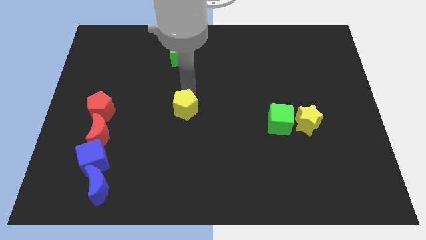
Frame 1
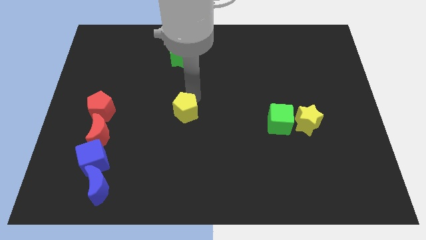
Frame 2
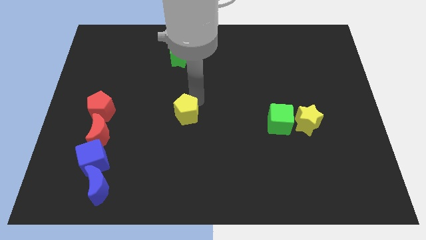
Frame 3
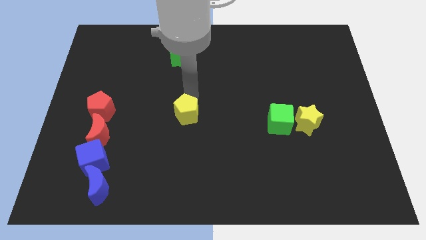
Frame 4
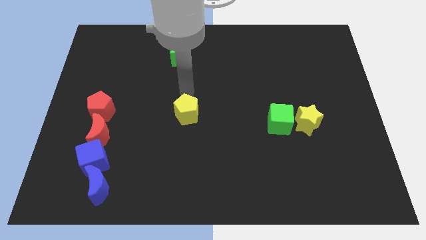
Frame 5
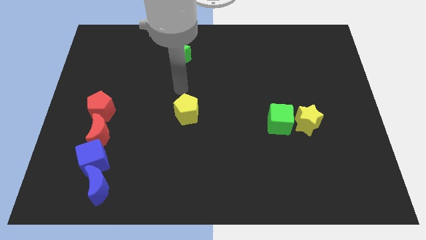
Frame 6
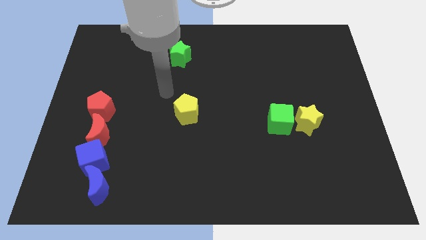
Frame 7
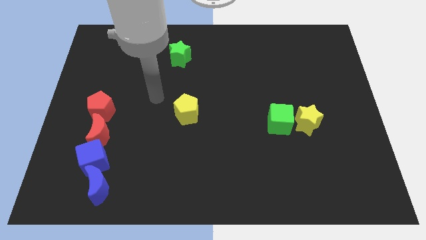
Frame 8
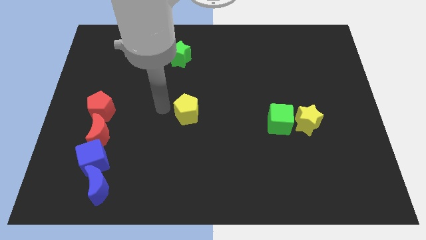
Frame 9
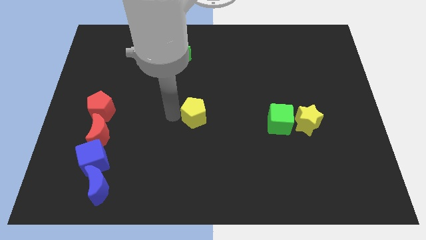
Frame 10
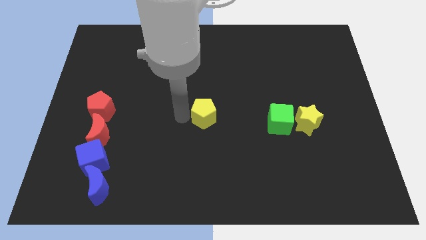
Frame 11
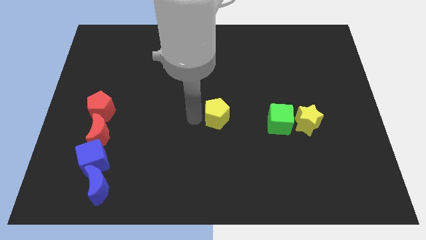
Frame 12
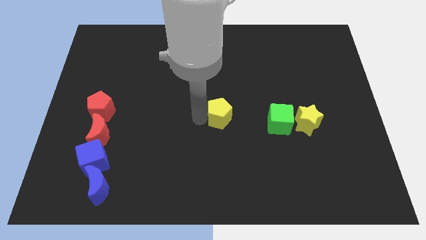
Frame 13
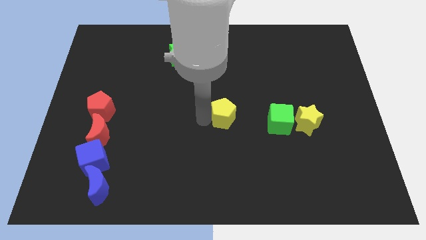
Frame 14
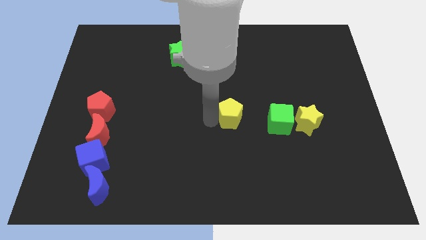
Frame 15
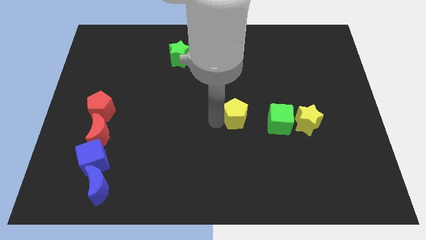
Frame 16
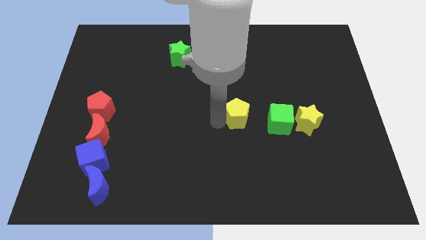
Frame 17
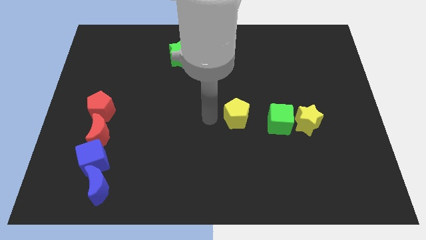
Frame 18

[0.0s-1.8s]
move the yellow pentagon to the left side of the green cube

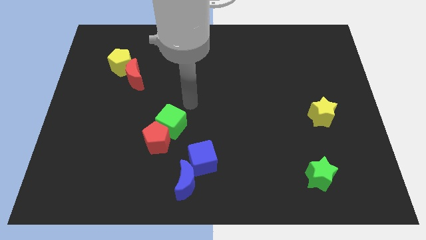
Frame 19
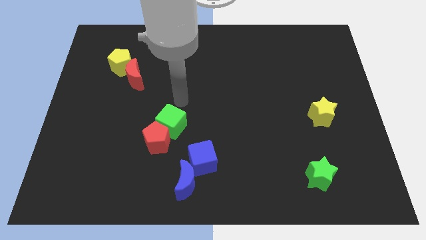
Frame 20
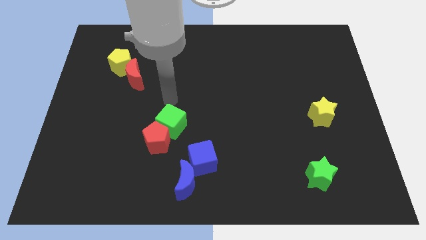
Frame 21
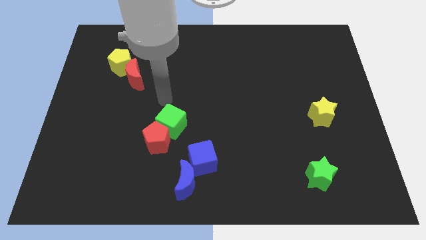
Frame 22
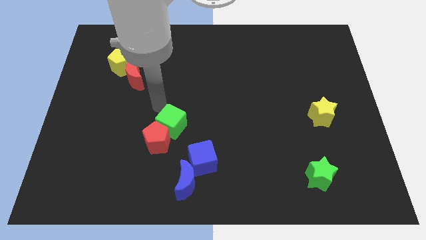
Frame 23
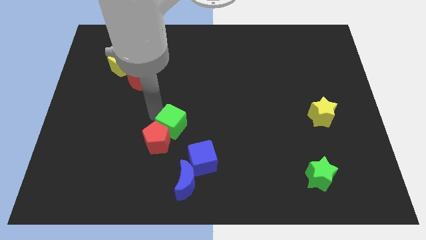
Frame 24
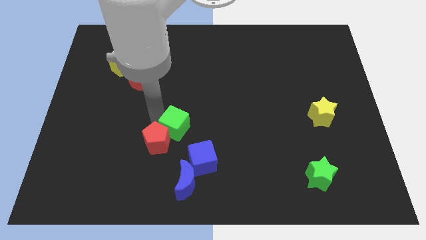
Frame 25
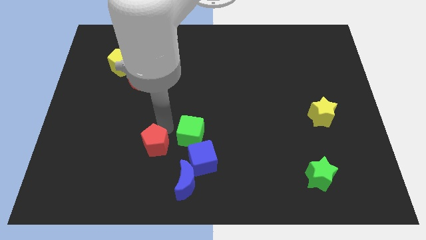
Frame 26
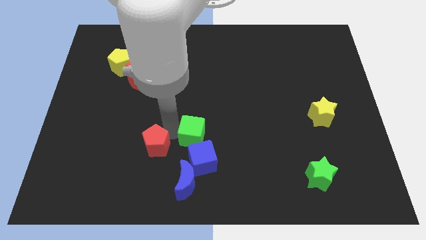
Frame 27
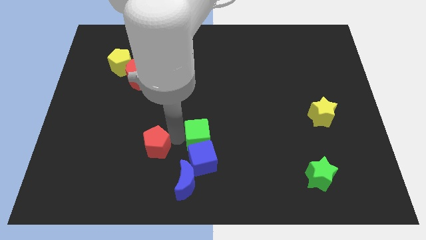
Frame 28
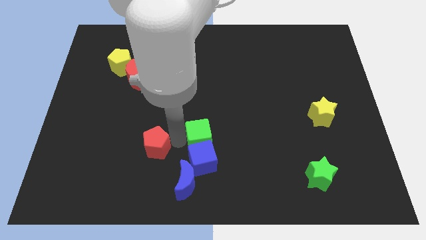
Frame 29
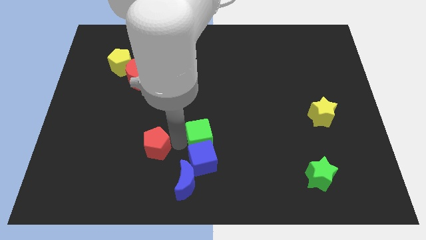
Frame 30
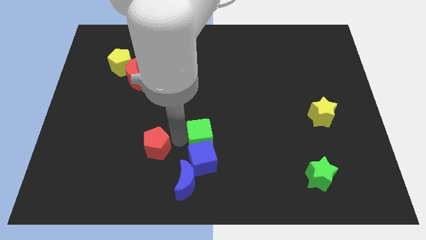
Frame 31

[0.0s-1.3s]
separate the the green cube towards top of blue cube

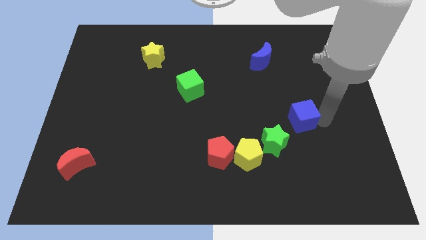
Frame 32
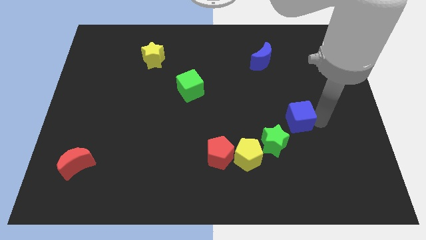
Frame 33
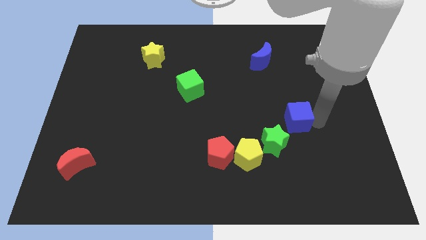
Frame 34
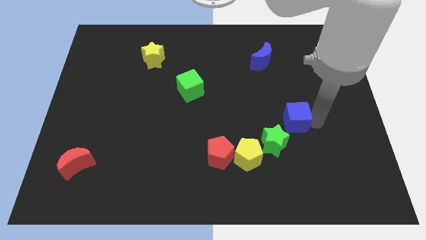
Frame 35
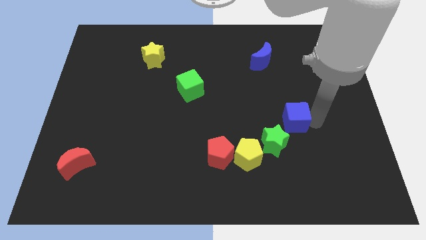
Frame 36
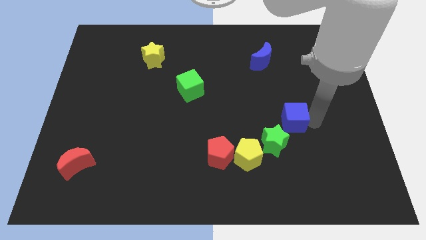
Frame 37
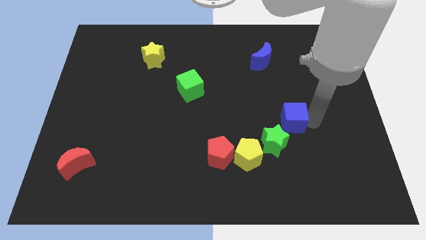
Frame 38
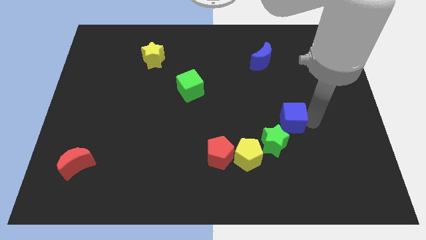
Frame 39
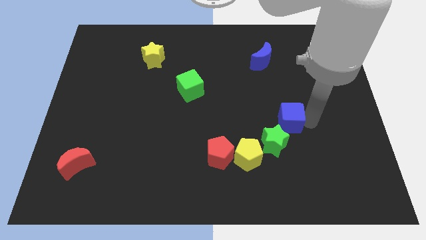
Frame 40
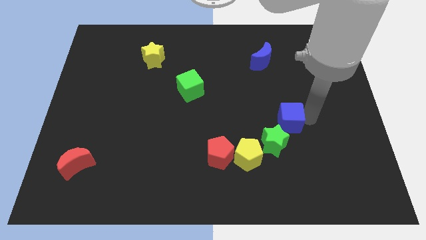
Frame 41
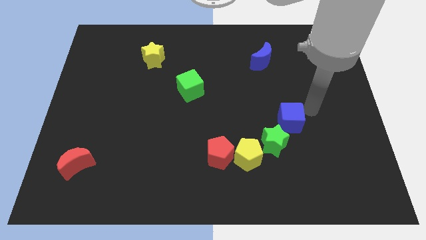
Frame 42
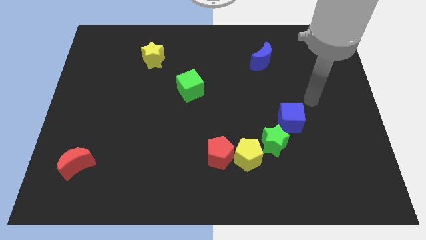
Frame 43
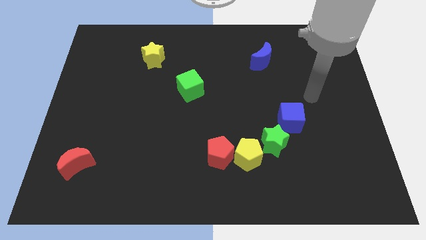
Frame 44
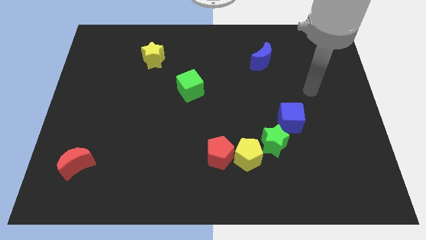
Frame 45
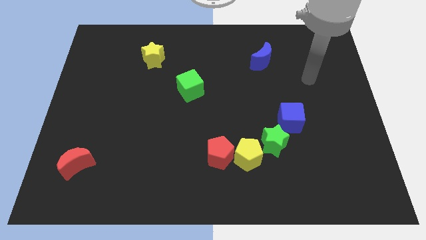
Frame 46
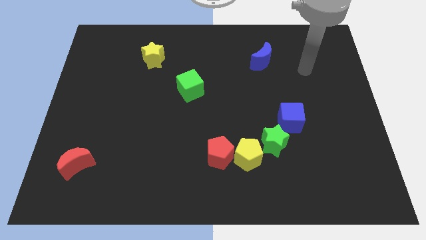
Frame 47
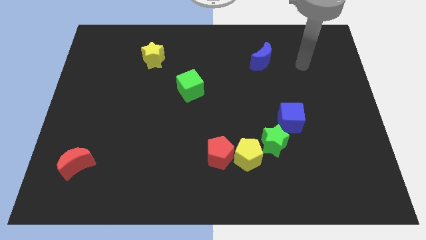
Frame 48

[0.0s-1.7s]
place the blue cube towards the top right side of the green star

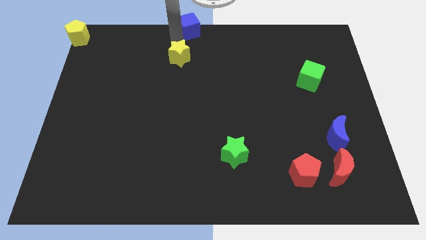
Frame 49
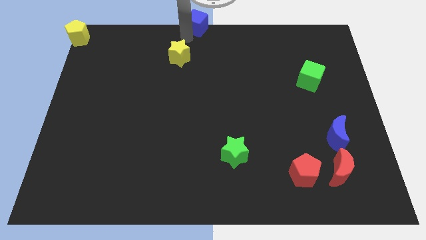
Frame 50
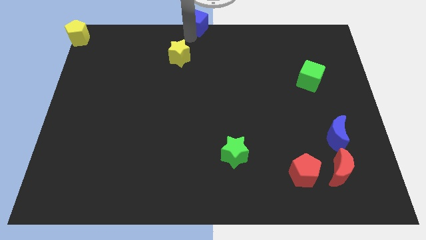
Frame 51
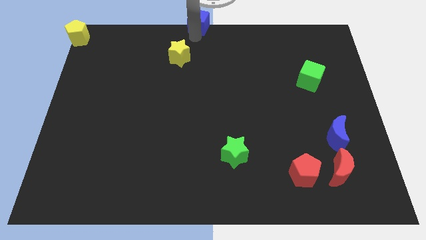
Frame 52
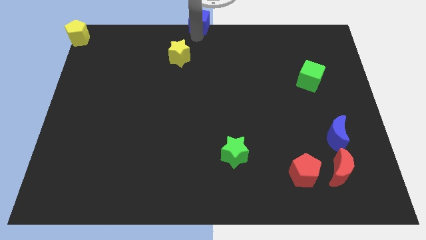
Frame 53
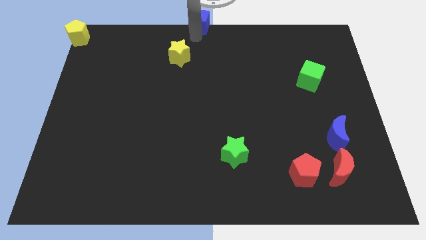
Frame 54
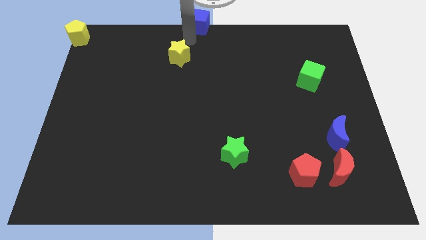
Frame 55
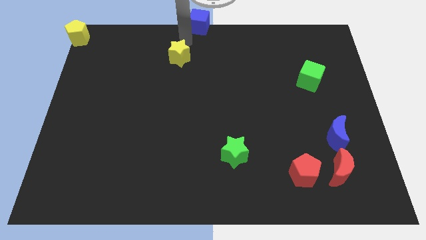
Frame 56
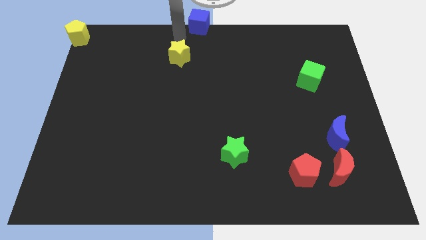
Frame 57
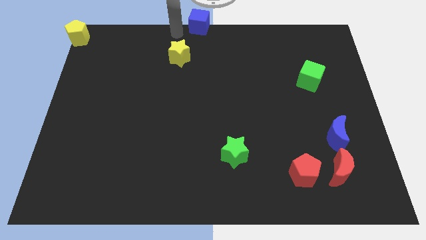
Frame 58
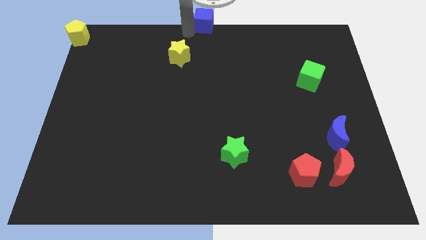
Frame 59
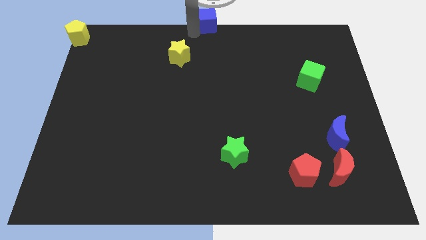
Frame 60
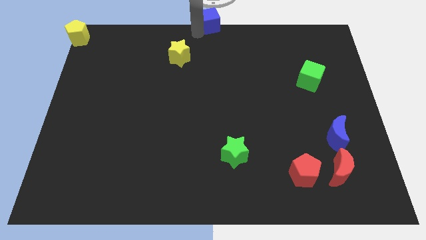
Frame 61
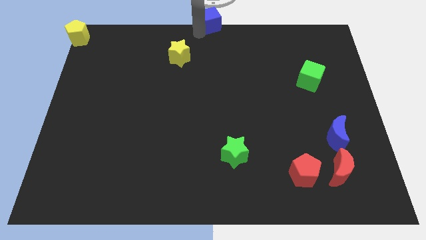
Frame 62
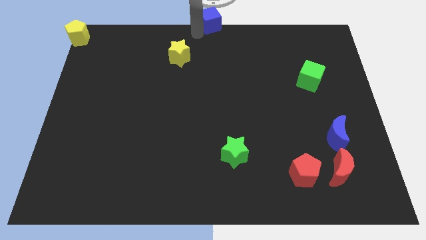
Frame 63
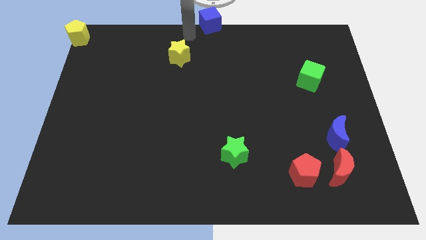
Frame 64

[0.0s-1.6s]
move blue cube to the top middle of the board

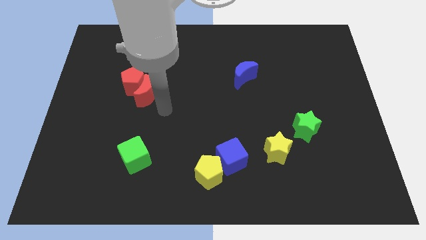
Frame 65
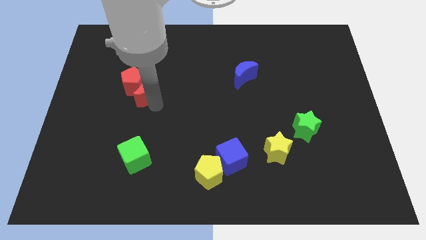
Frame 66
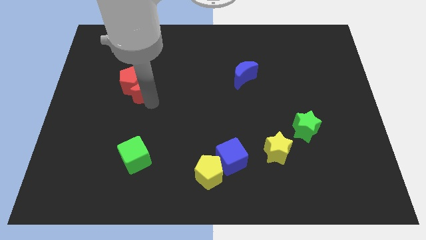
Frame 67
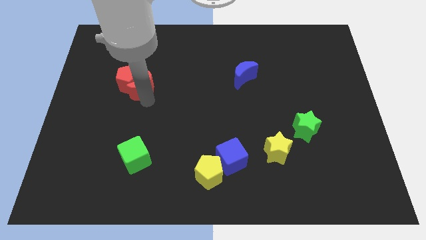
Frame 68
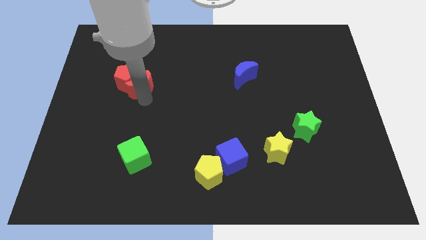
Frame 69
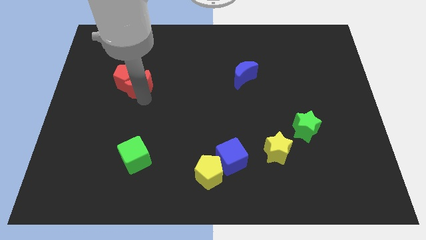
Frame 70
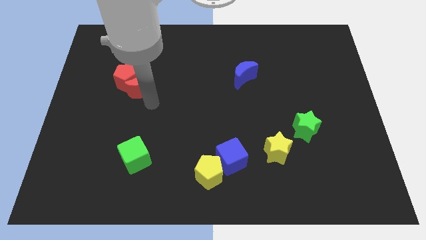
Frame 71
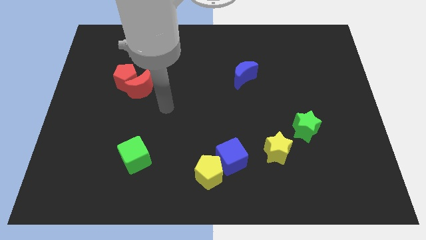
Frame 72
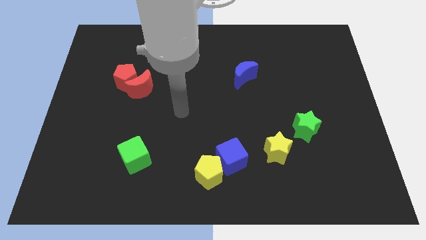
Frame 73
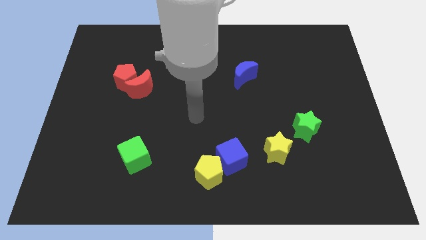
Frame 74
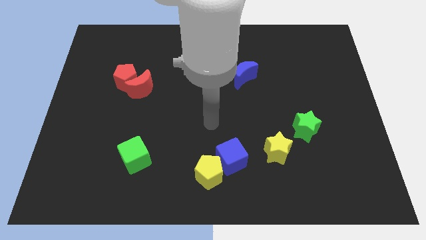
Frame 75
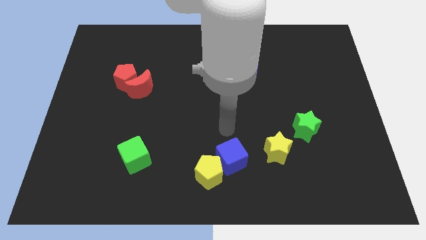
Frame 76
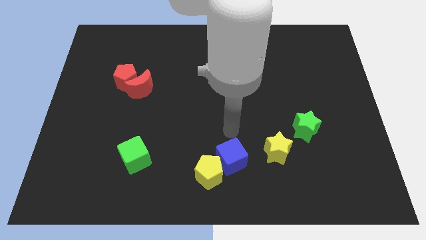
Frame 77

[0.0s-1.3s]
move the arm away from the red blocks

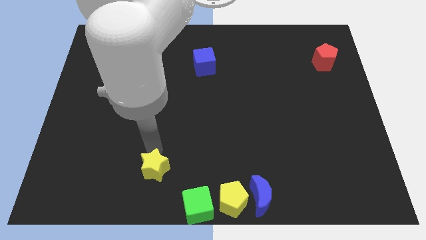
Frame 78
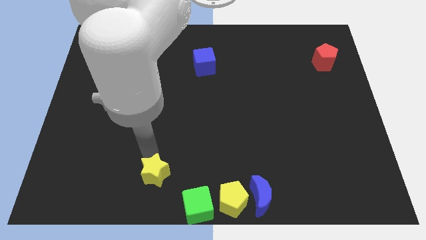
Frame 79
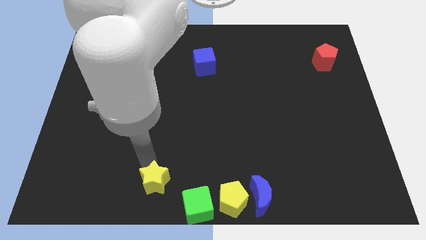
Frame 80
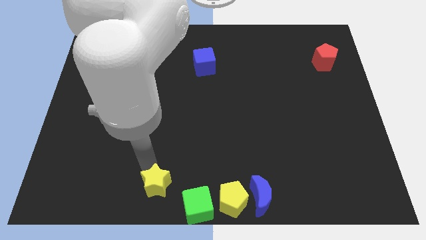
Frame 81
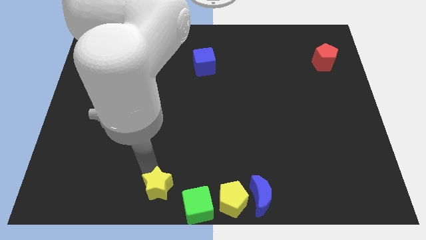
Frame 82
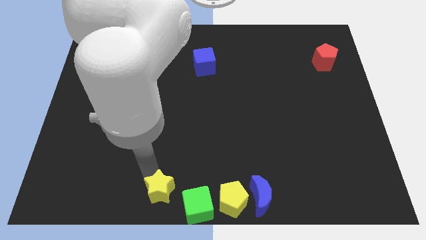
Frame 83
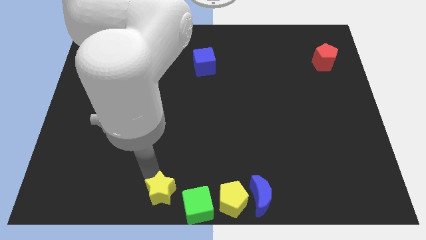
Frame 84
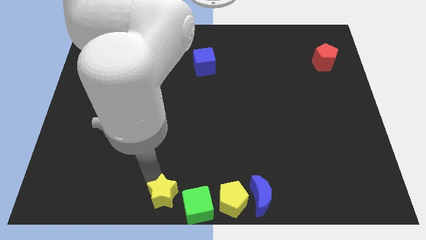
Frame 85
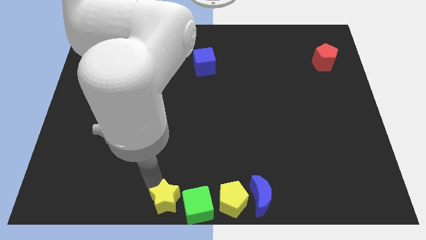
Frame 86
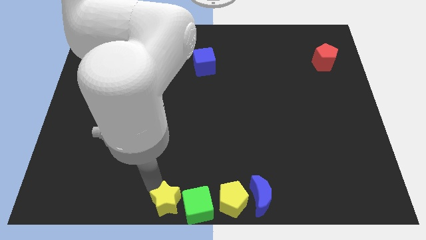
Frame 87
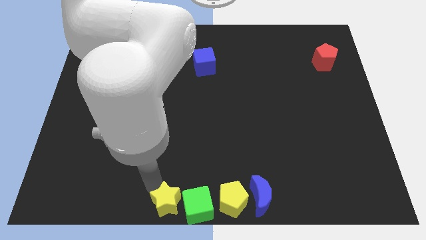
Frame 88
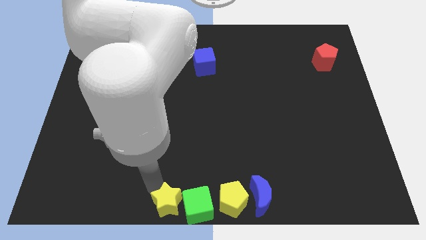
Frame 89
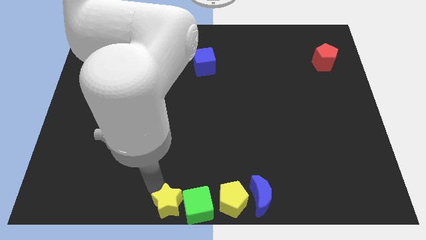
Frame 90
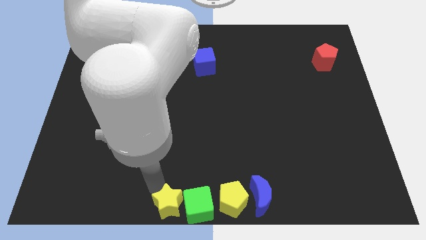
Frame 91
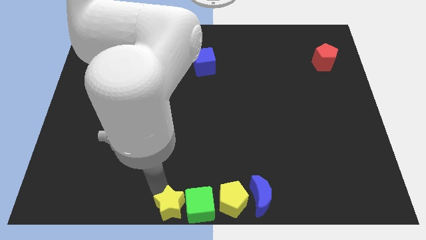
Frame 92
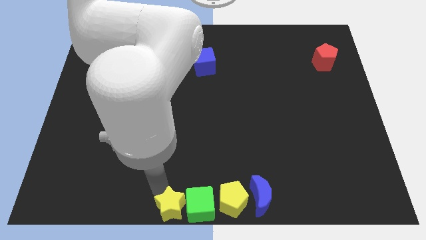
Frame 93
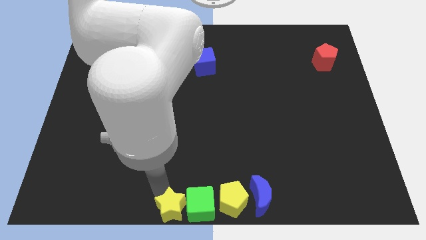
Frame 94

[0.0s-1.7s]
push the yellow star to the left of the green cube
